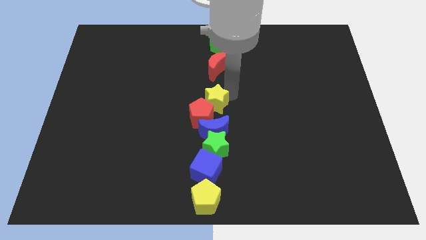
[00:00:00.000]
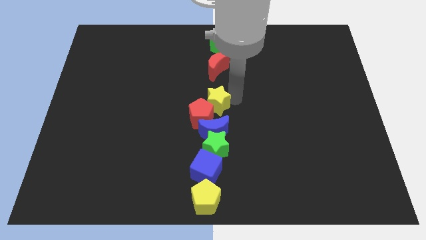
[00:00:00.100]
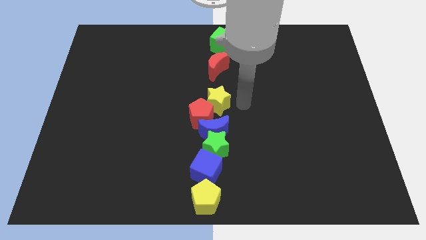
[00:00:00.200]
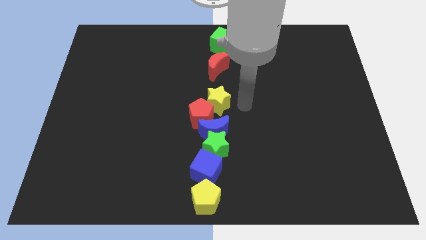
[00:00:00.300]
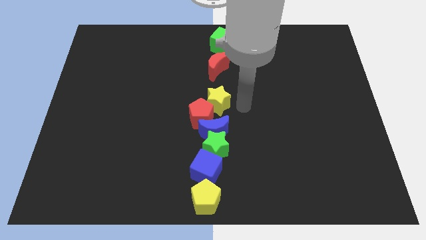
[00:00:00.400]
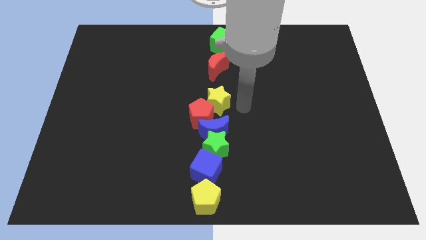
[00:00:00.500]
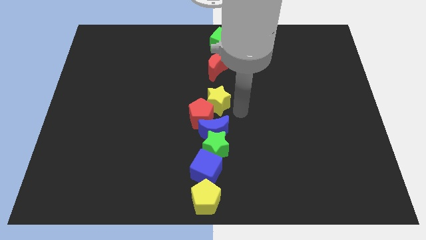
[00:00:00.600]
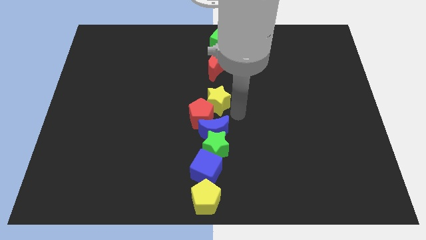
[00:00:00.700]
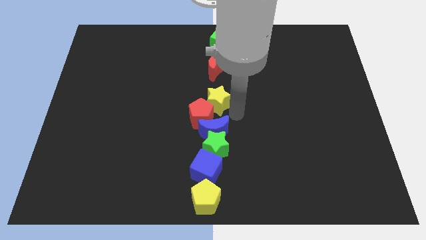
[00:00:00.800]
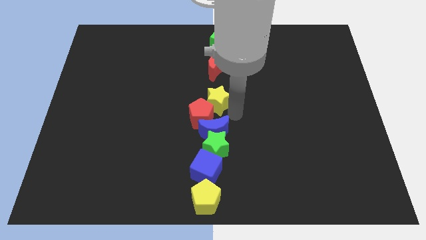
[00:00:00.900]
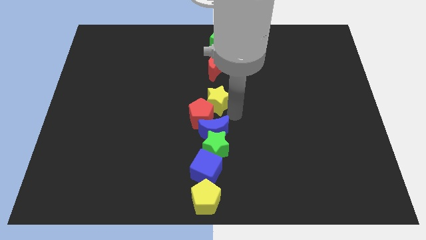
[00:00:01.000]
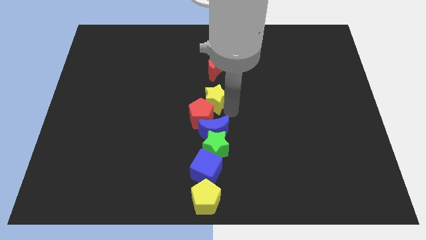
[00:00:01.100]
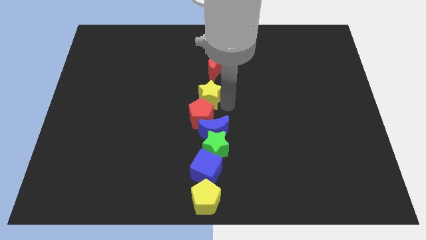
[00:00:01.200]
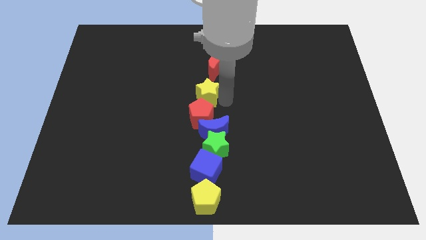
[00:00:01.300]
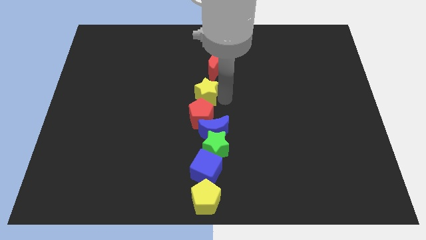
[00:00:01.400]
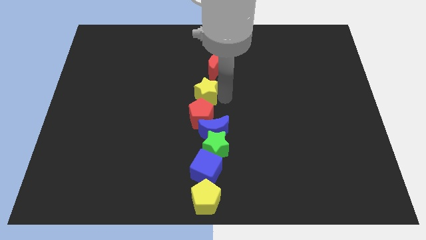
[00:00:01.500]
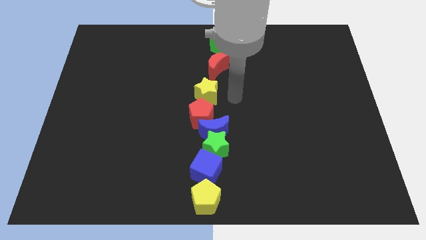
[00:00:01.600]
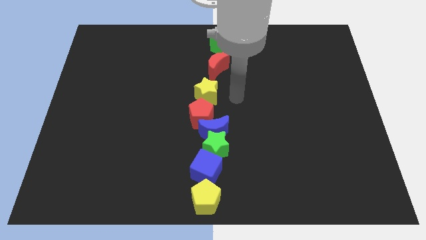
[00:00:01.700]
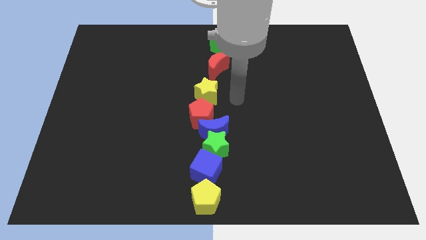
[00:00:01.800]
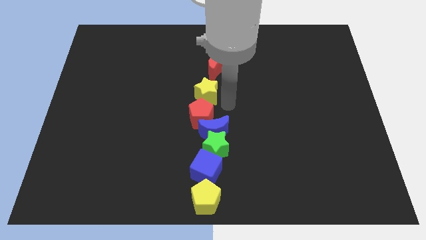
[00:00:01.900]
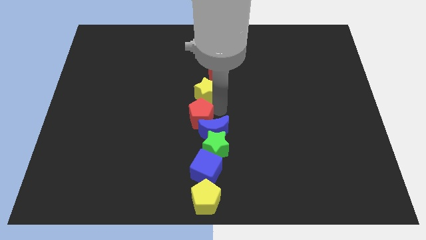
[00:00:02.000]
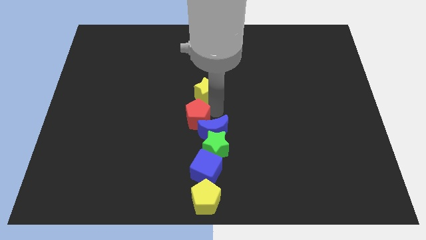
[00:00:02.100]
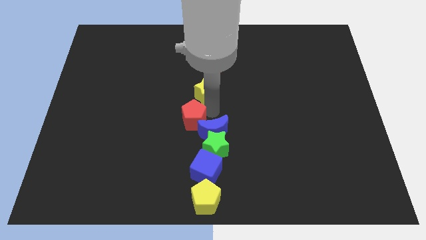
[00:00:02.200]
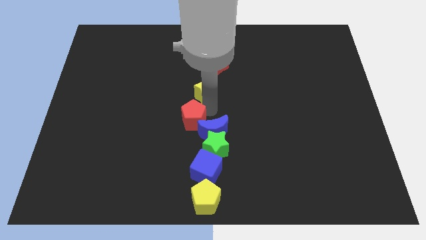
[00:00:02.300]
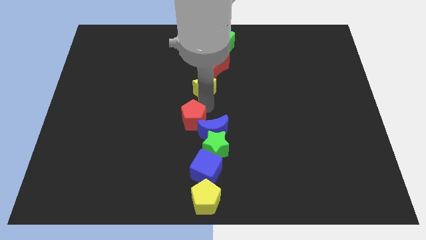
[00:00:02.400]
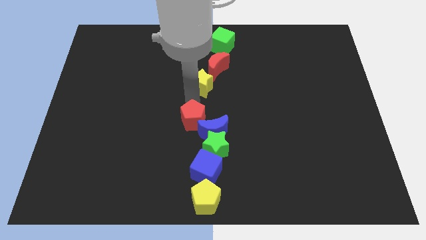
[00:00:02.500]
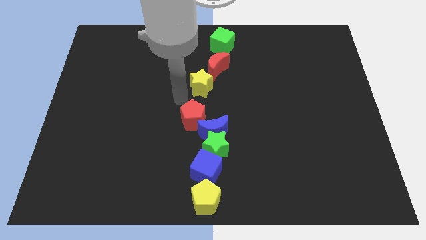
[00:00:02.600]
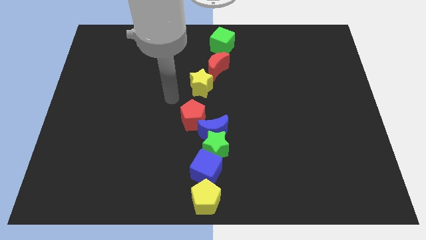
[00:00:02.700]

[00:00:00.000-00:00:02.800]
separate yellow star from red pentagon

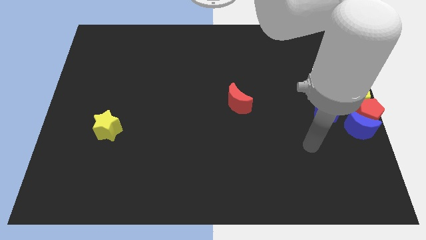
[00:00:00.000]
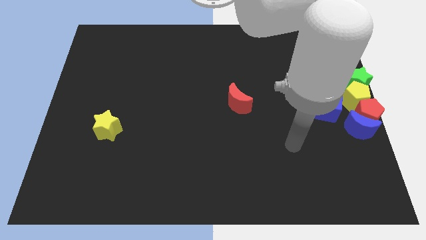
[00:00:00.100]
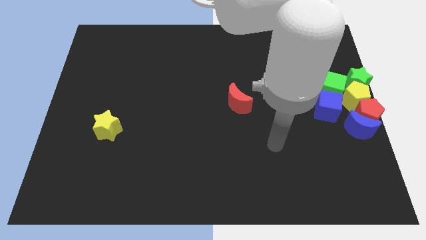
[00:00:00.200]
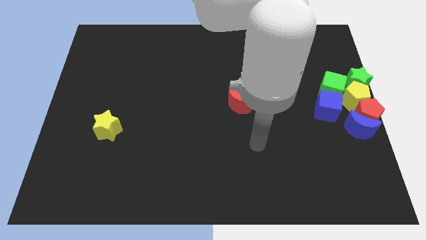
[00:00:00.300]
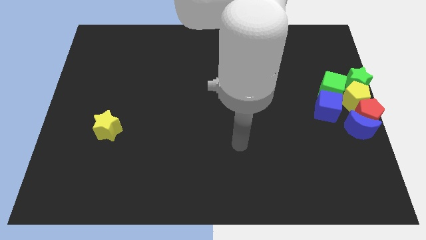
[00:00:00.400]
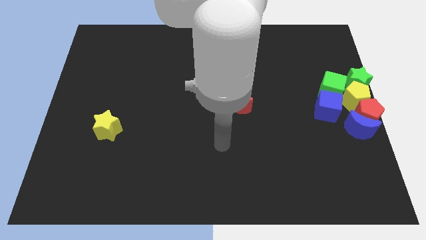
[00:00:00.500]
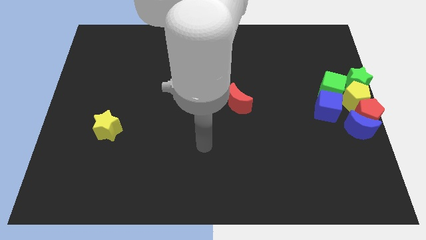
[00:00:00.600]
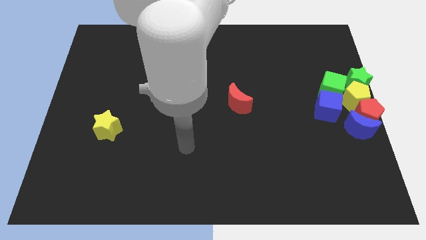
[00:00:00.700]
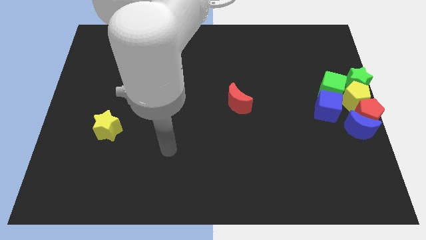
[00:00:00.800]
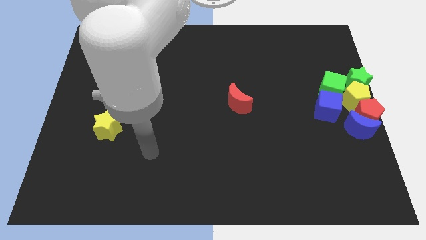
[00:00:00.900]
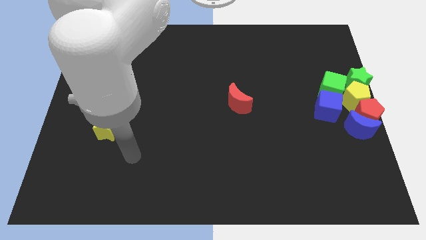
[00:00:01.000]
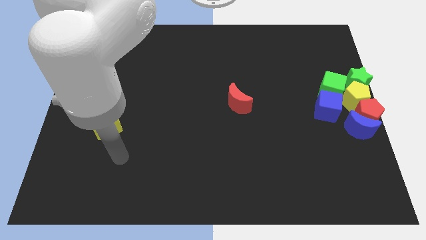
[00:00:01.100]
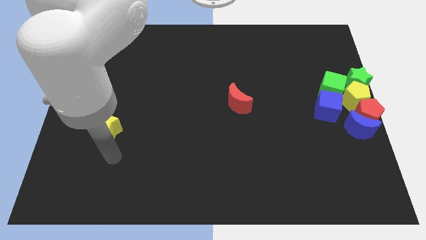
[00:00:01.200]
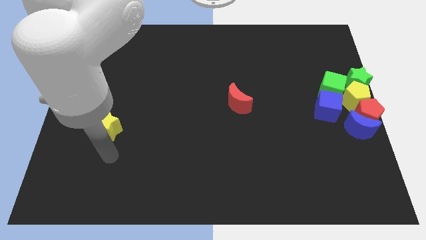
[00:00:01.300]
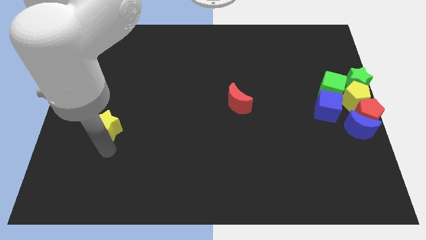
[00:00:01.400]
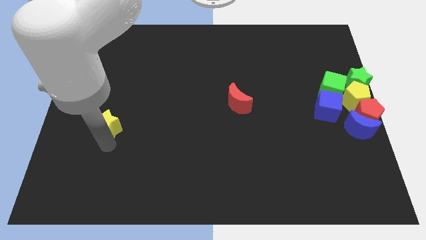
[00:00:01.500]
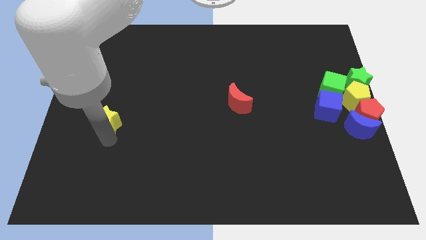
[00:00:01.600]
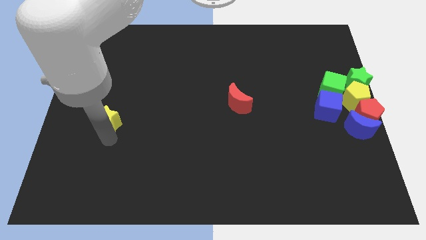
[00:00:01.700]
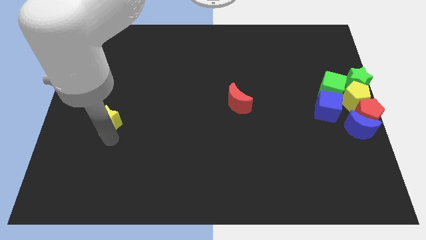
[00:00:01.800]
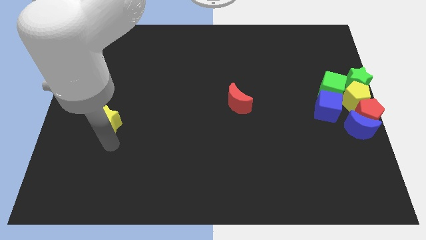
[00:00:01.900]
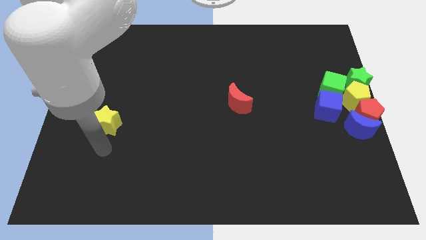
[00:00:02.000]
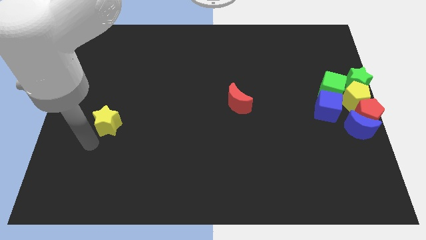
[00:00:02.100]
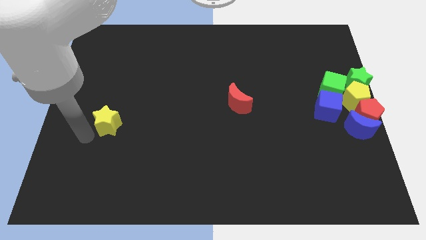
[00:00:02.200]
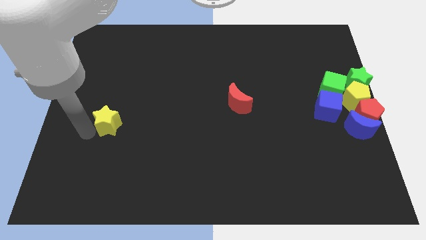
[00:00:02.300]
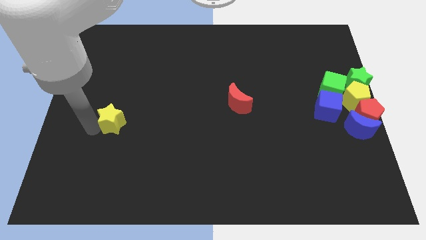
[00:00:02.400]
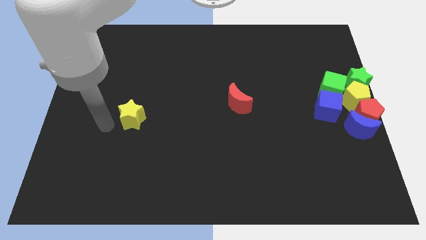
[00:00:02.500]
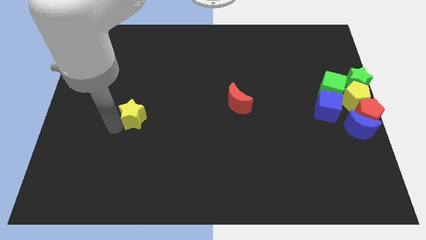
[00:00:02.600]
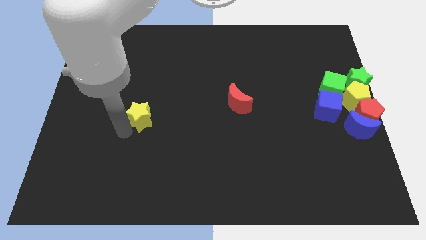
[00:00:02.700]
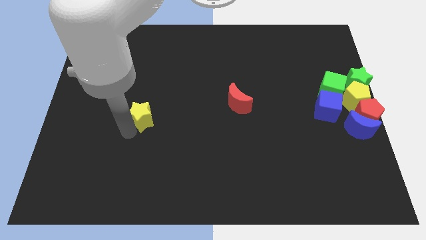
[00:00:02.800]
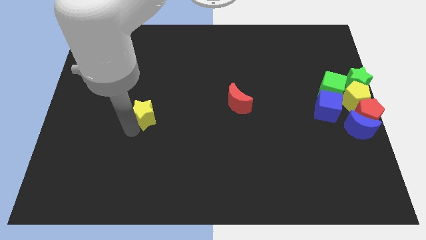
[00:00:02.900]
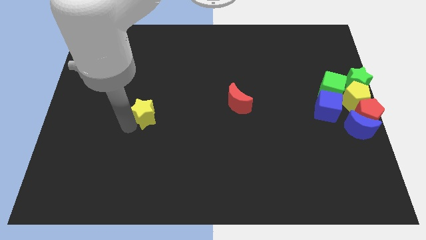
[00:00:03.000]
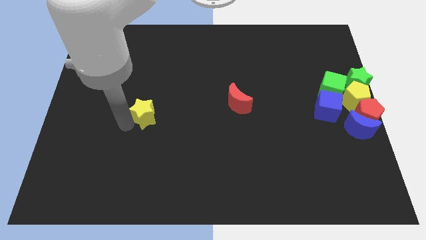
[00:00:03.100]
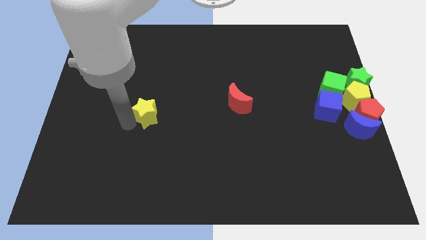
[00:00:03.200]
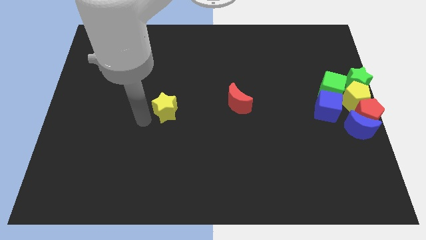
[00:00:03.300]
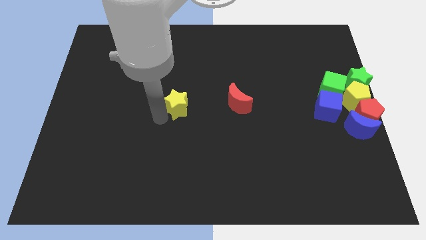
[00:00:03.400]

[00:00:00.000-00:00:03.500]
push the yellow star to the left of the red crescent

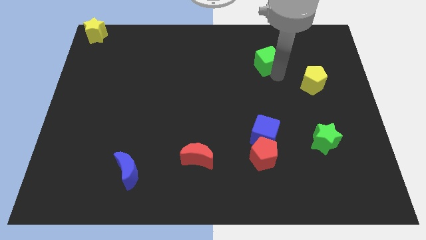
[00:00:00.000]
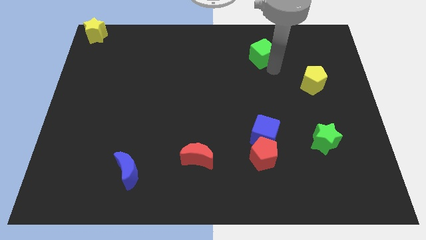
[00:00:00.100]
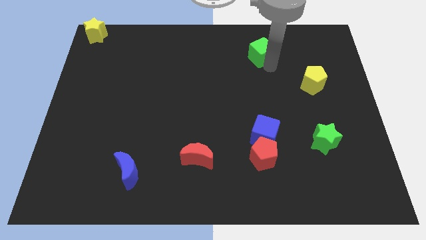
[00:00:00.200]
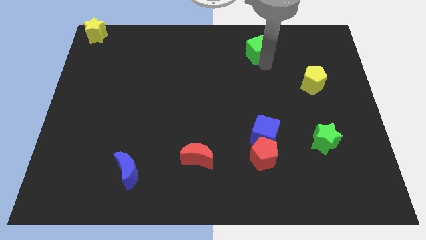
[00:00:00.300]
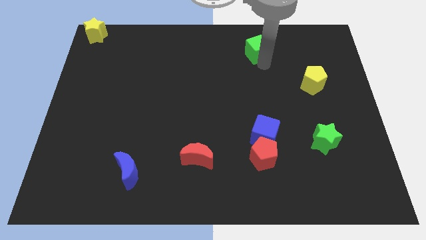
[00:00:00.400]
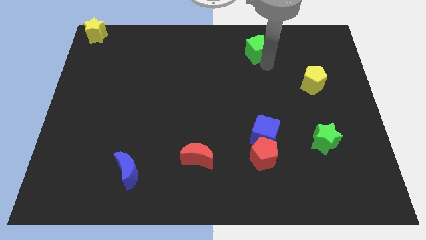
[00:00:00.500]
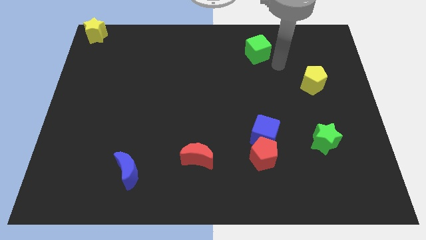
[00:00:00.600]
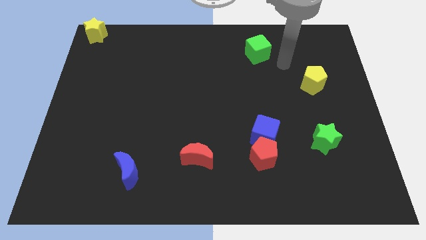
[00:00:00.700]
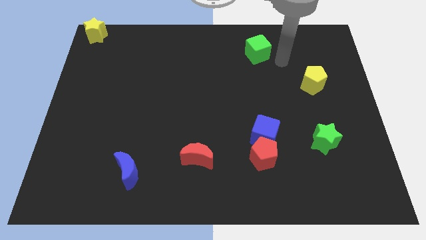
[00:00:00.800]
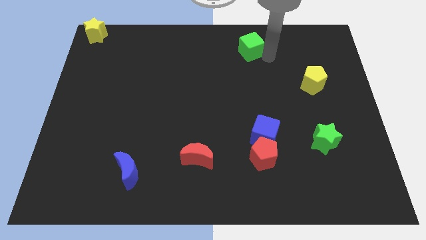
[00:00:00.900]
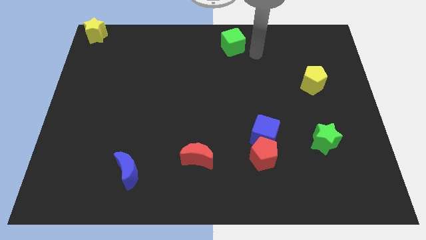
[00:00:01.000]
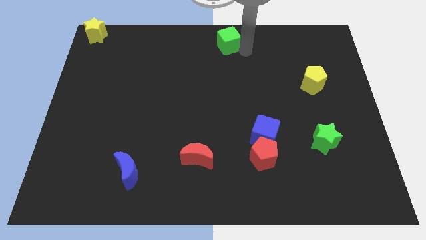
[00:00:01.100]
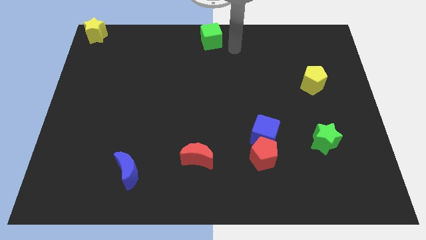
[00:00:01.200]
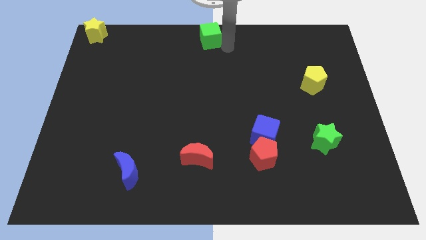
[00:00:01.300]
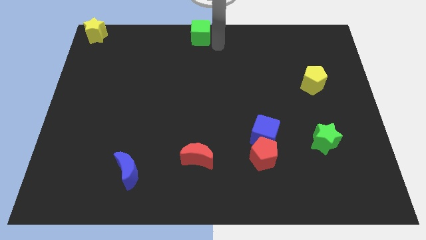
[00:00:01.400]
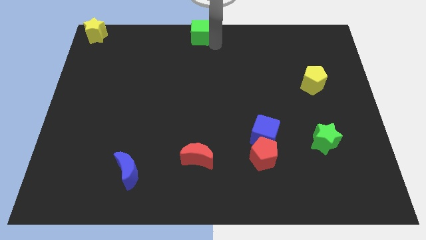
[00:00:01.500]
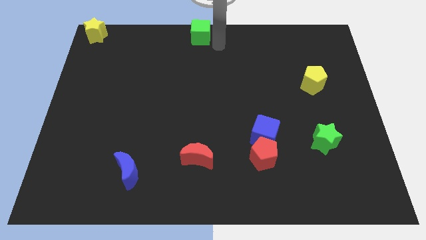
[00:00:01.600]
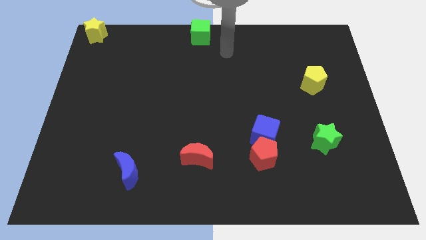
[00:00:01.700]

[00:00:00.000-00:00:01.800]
move the green cube to the top center

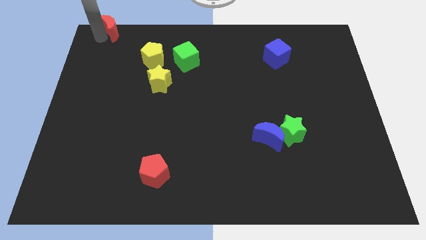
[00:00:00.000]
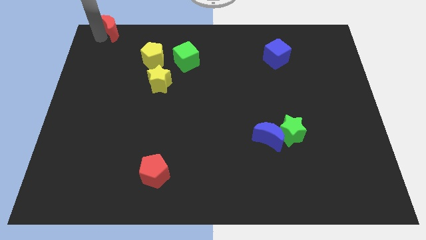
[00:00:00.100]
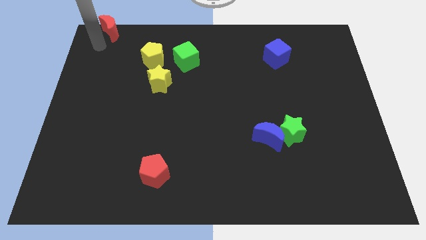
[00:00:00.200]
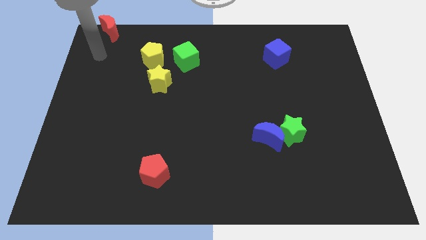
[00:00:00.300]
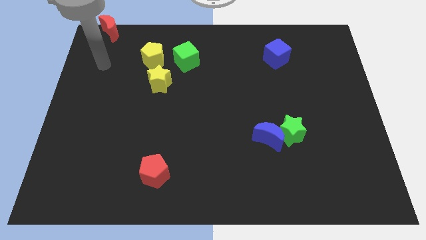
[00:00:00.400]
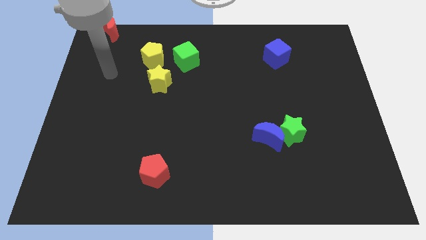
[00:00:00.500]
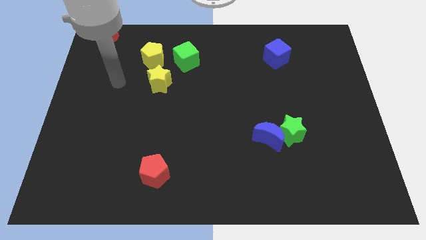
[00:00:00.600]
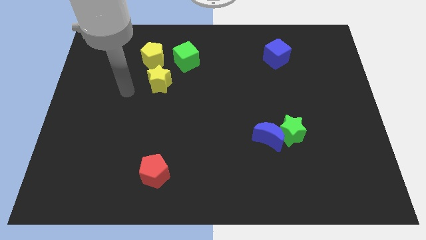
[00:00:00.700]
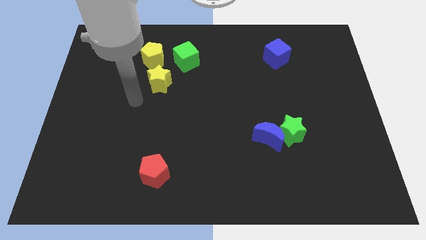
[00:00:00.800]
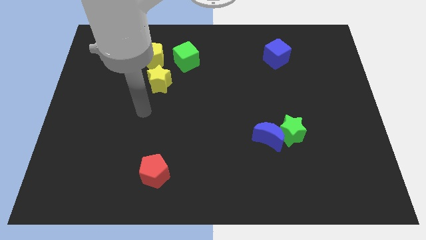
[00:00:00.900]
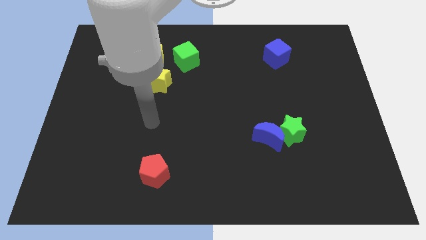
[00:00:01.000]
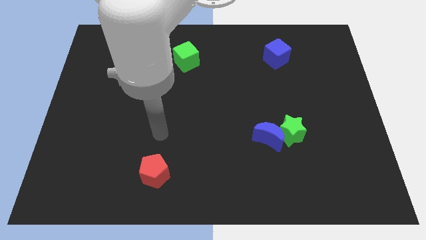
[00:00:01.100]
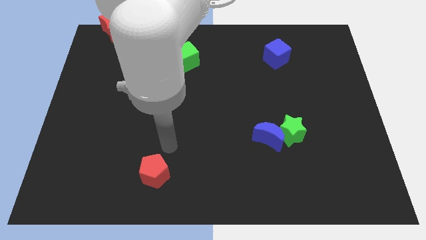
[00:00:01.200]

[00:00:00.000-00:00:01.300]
move the arm away from the red moon
